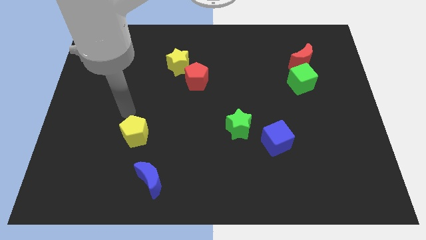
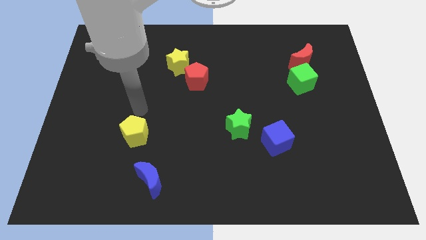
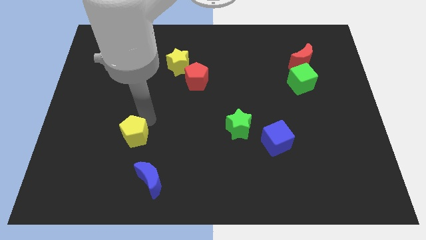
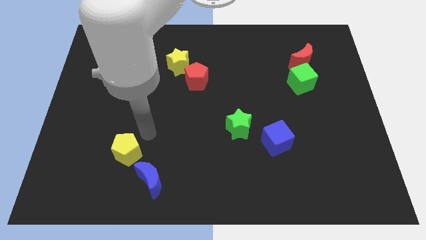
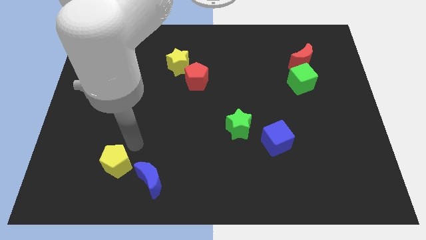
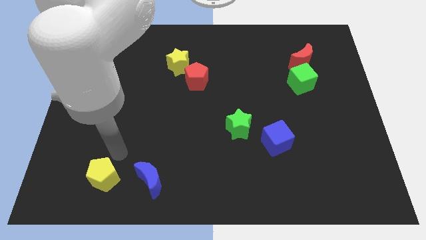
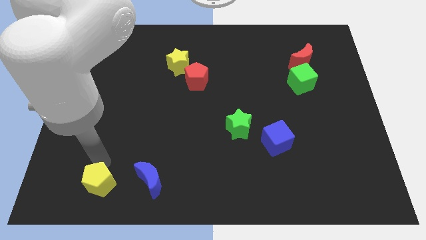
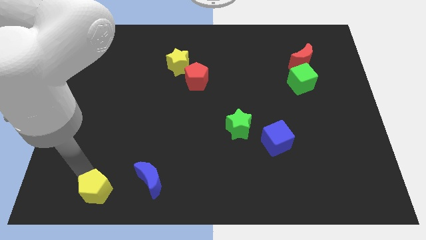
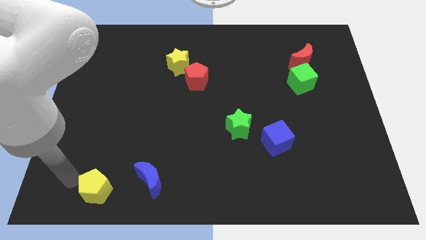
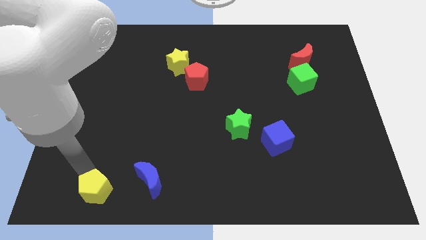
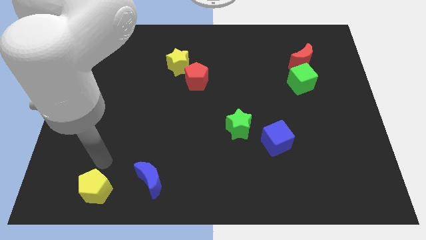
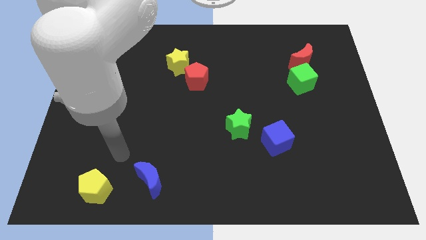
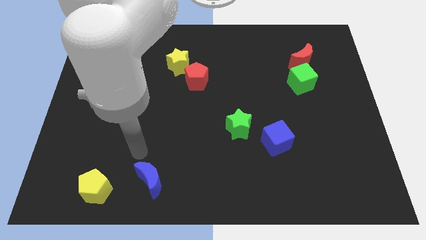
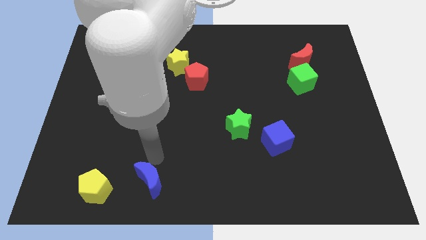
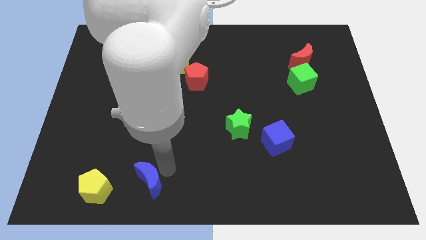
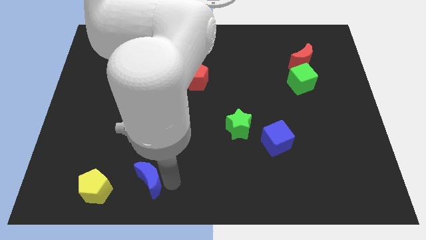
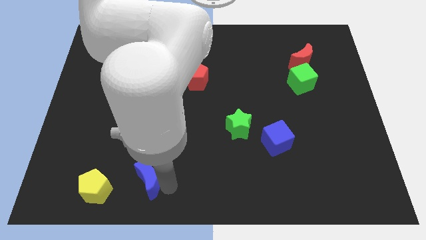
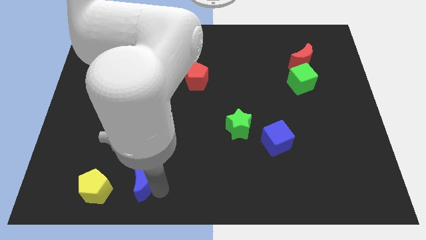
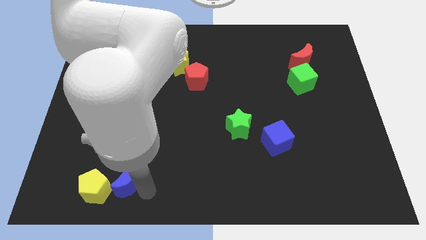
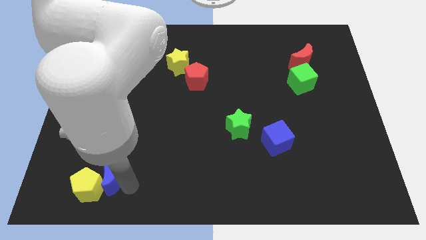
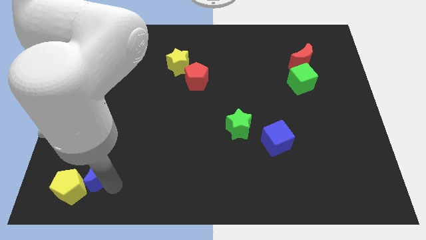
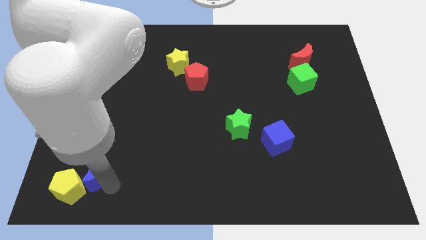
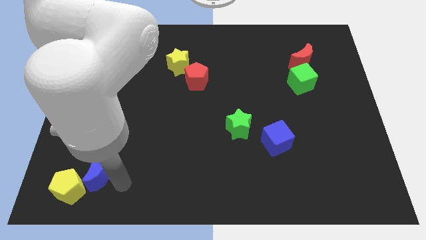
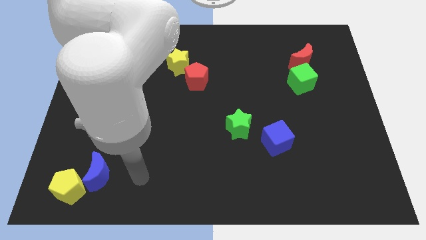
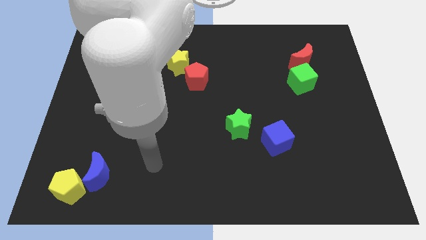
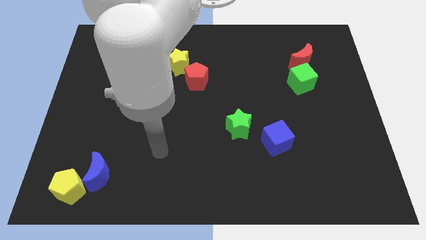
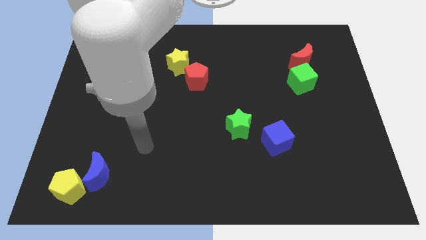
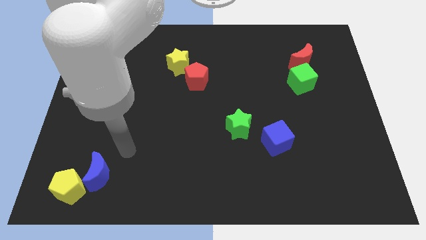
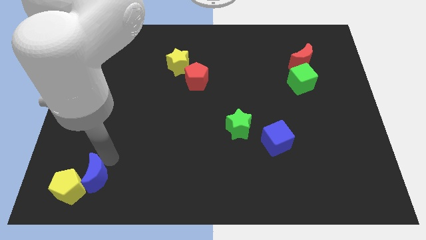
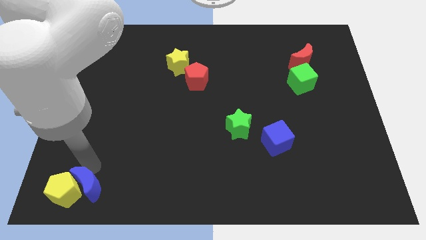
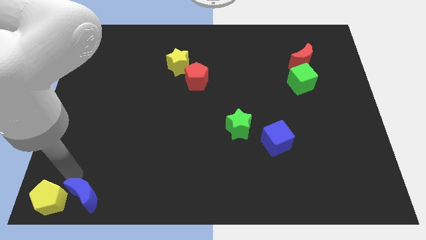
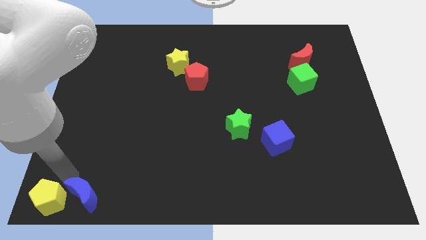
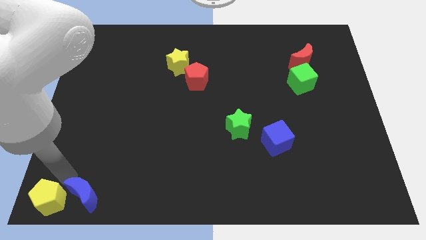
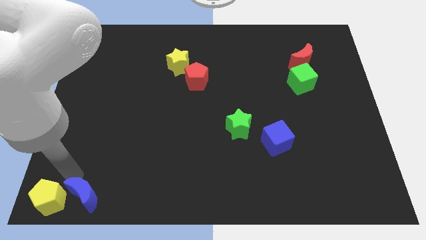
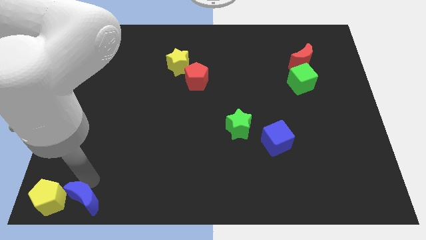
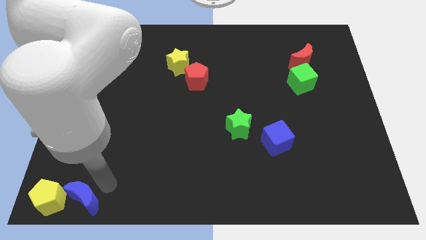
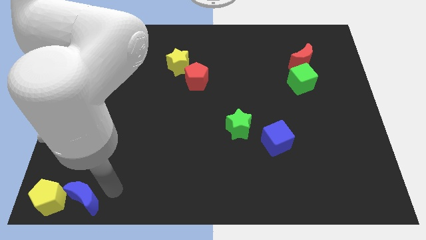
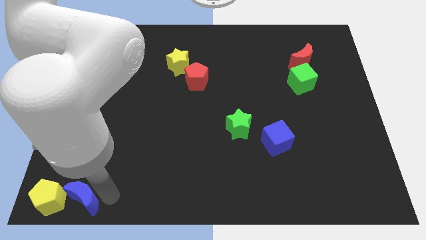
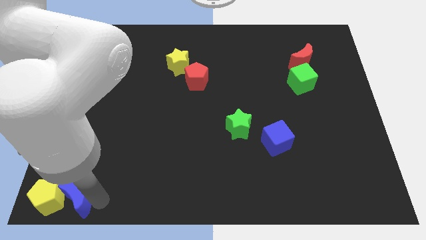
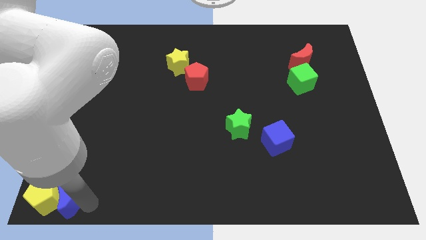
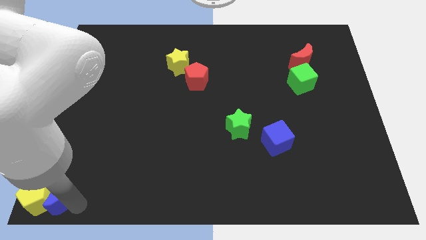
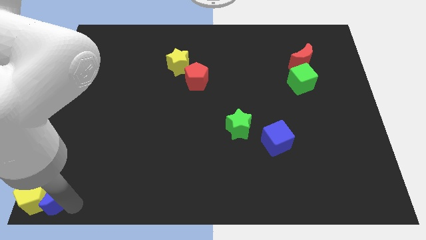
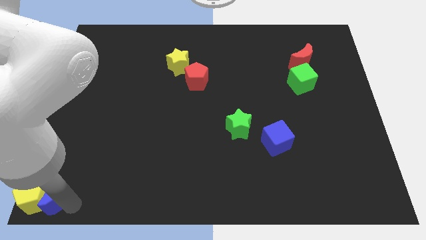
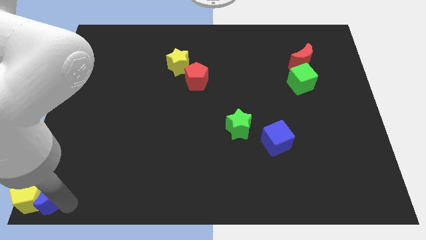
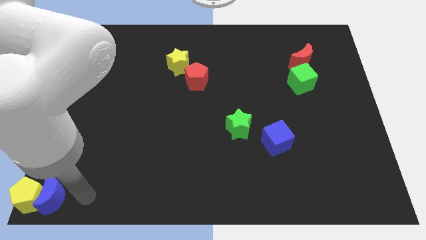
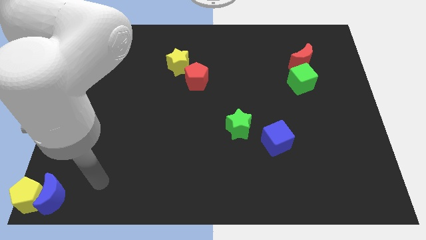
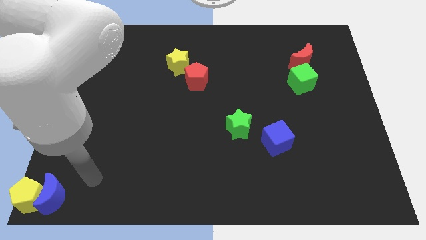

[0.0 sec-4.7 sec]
push the yellow pentagon with the blue crescent to the bottom left of the board

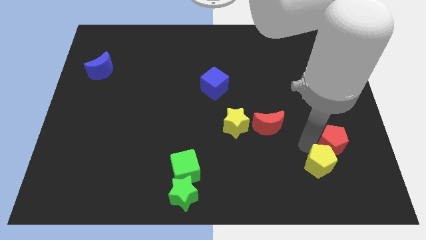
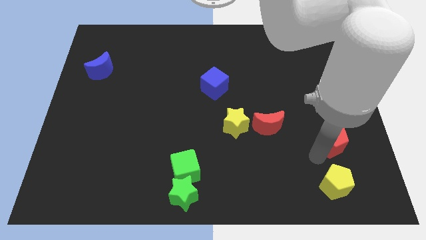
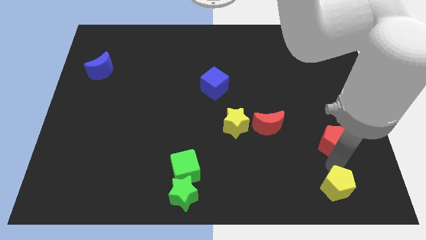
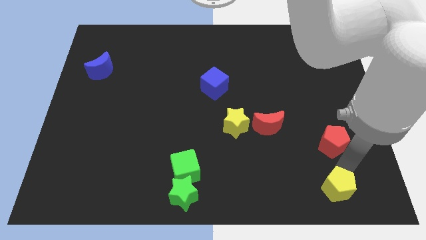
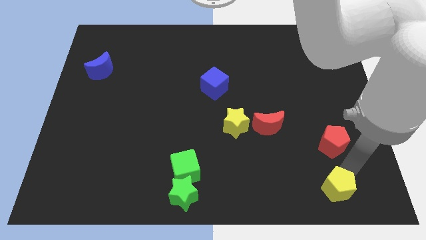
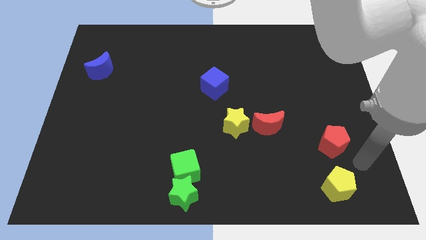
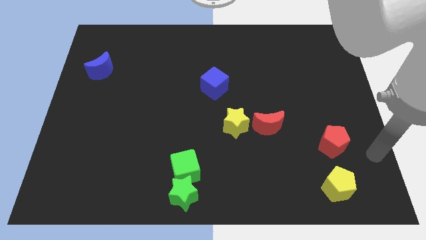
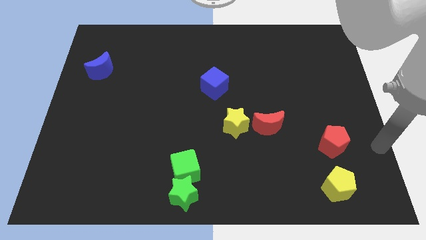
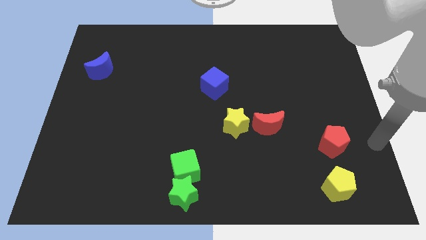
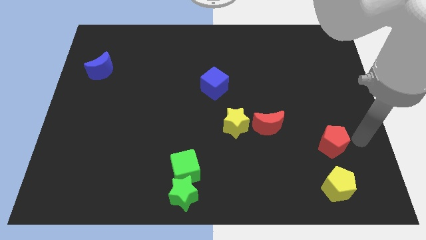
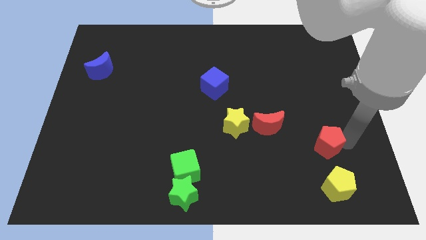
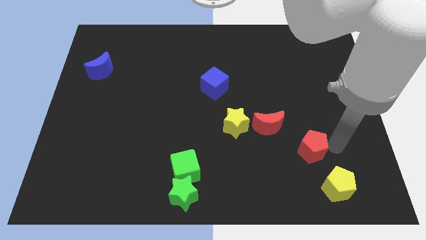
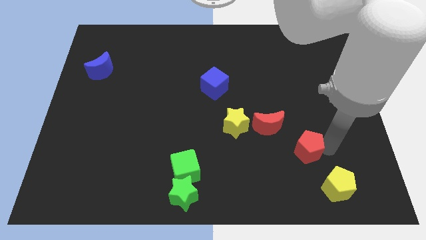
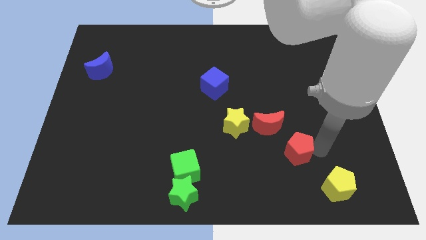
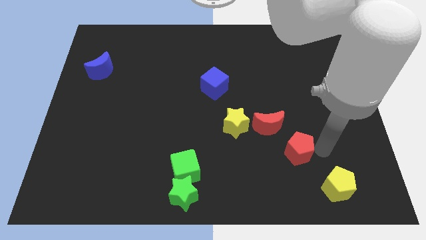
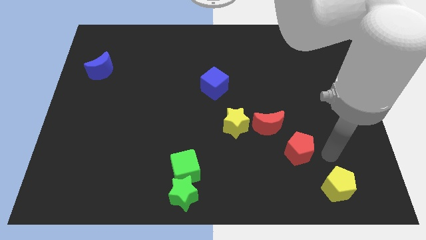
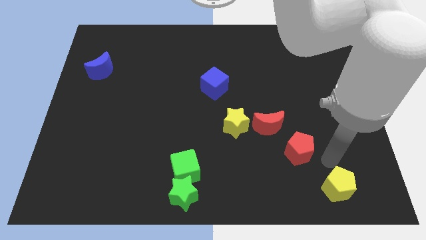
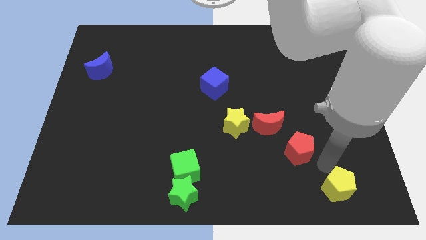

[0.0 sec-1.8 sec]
separate the yellow pentagon from the red pentagon

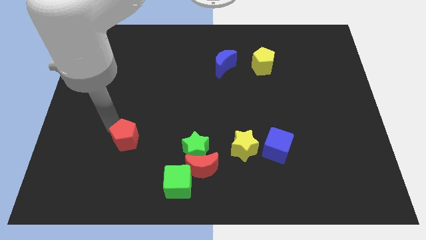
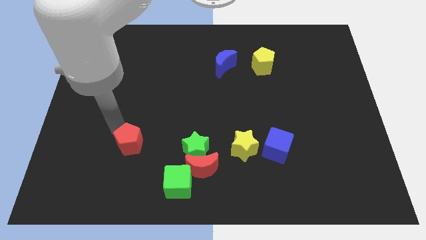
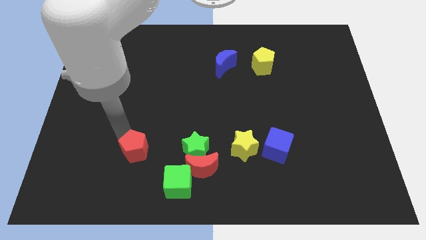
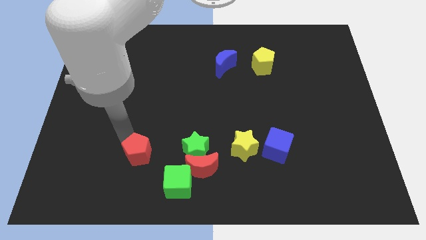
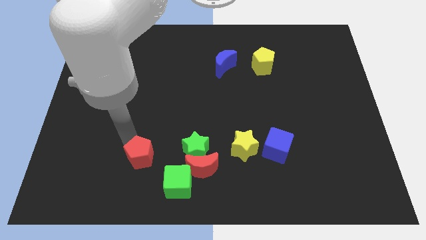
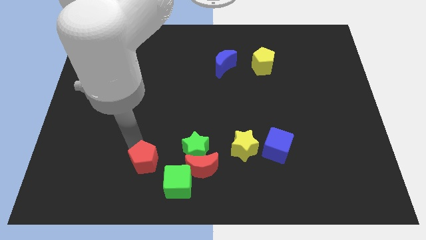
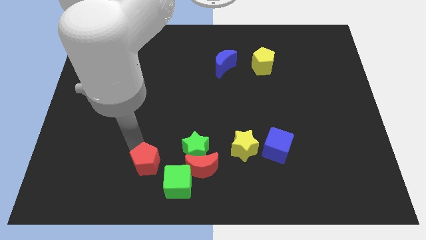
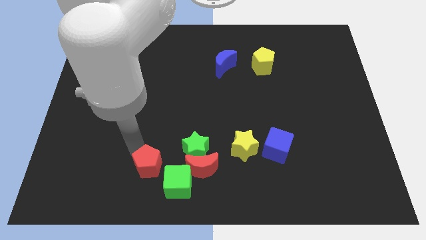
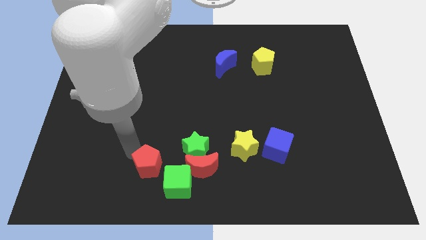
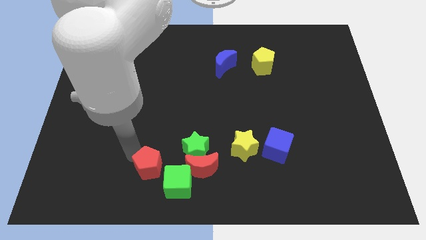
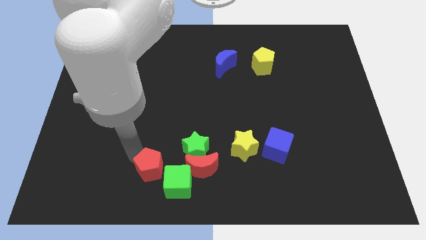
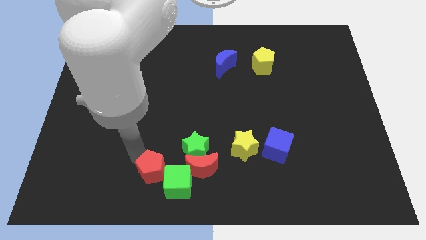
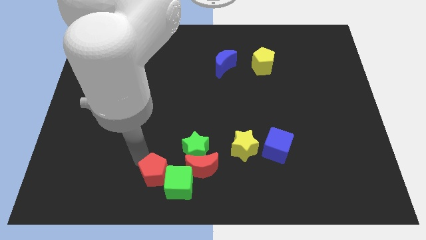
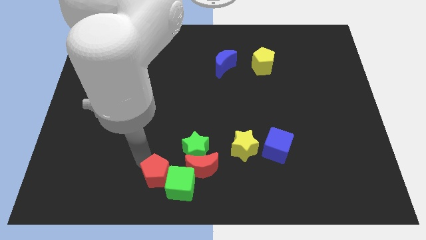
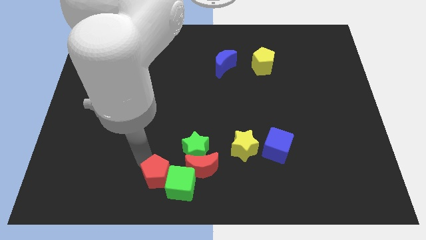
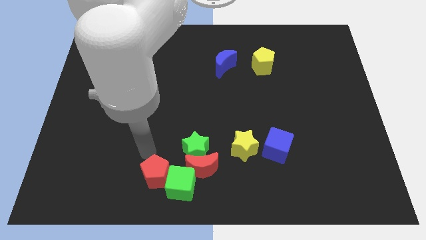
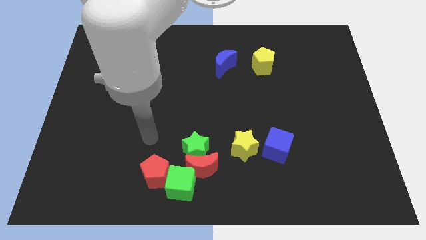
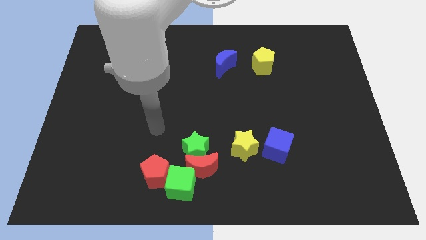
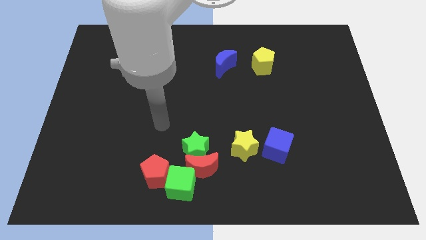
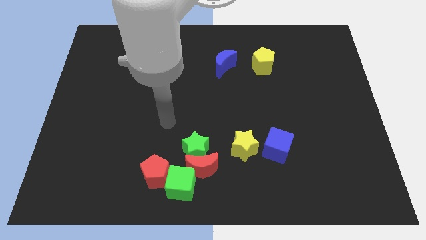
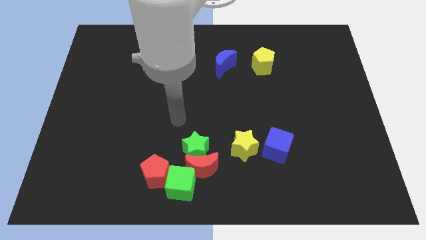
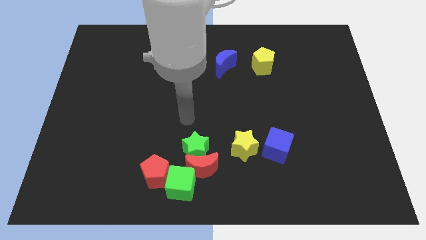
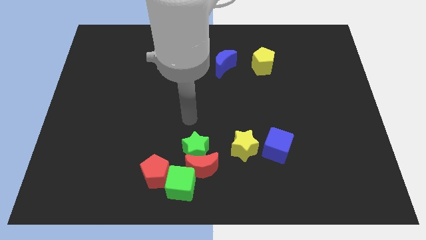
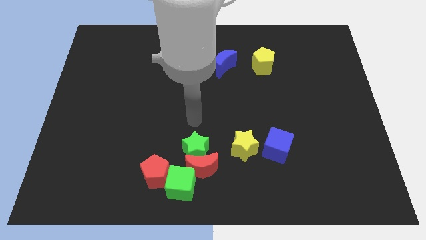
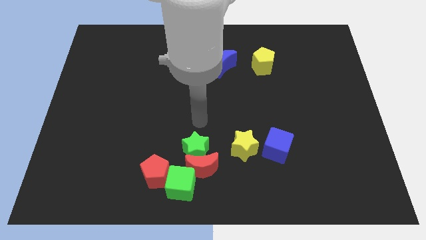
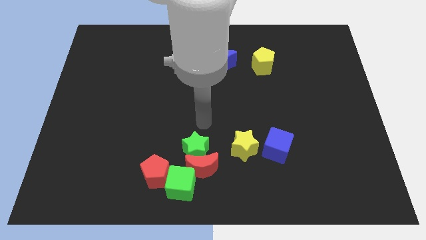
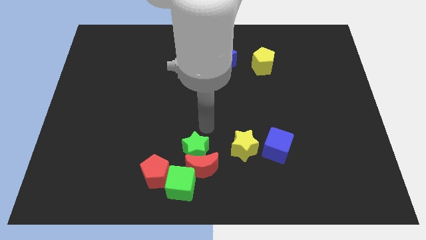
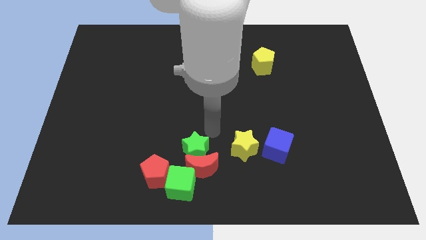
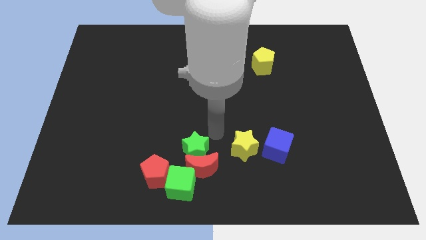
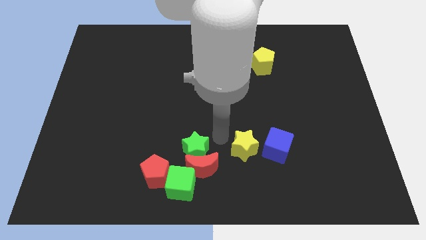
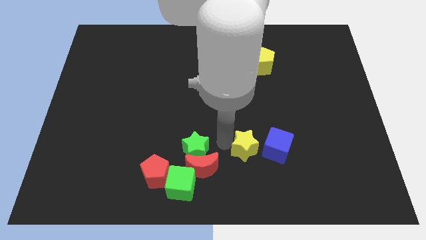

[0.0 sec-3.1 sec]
push the red pentagon left to the green cube
